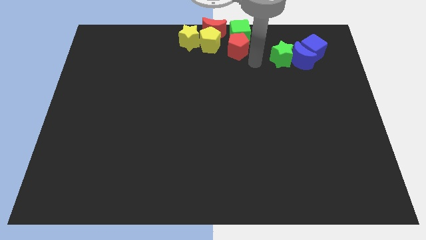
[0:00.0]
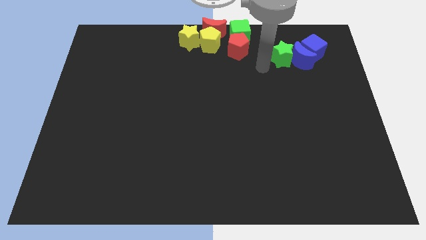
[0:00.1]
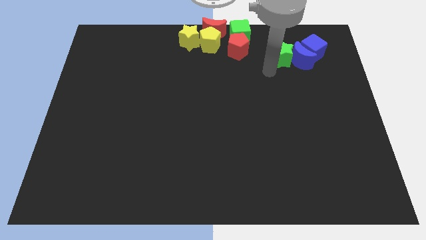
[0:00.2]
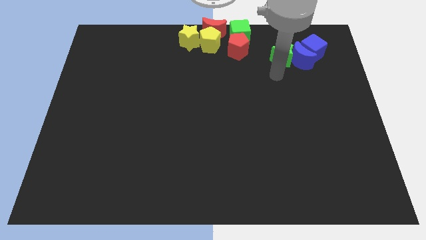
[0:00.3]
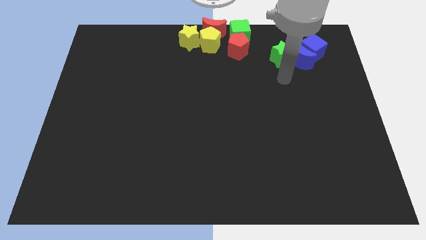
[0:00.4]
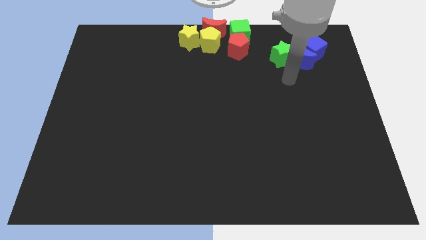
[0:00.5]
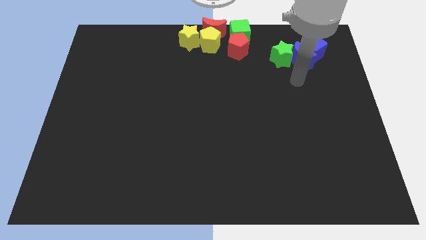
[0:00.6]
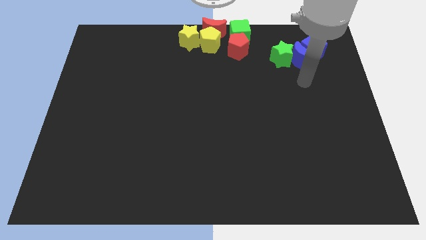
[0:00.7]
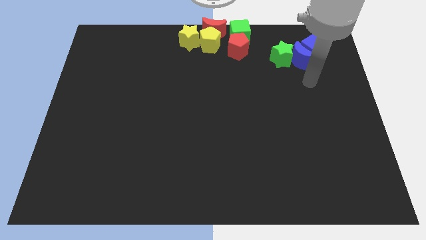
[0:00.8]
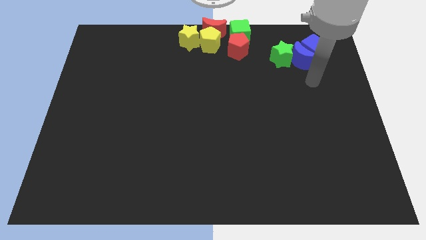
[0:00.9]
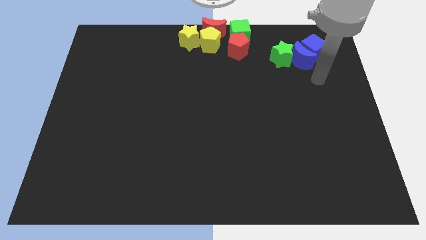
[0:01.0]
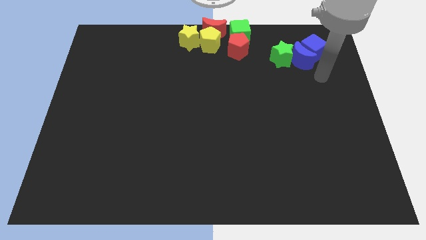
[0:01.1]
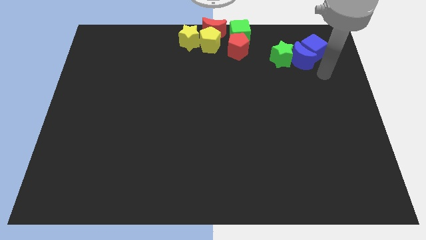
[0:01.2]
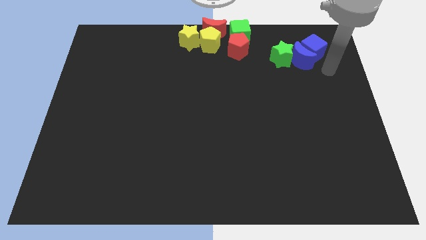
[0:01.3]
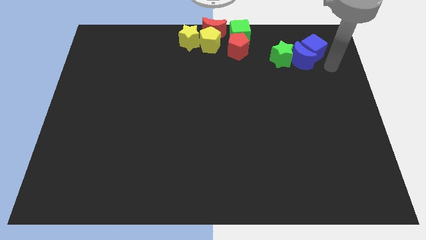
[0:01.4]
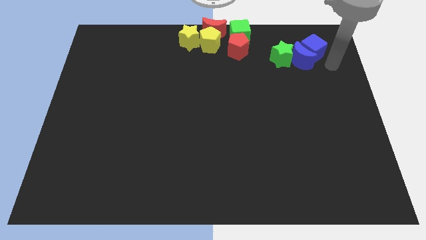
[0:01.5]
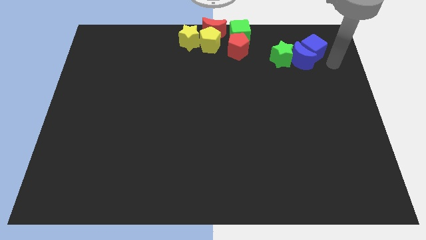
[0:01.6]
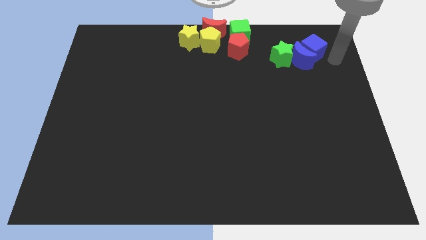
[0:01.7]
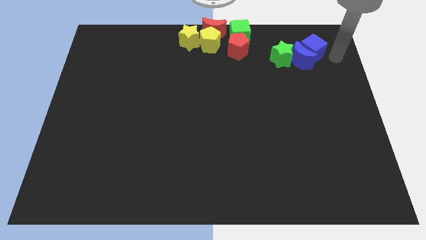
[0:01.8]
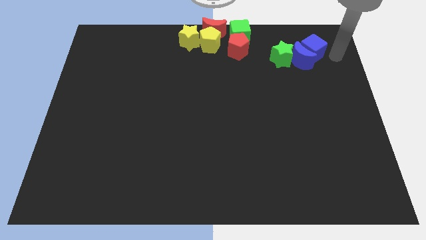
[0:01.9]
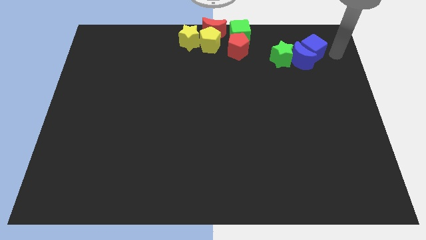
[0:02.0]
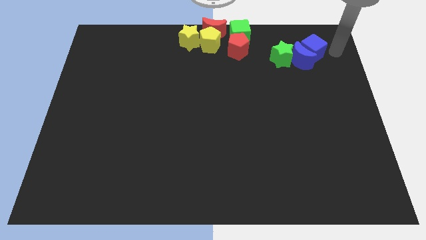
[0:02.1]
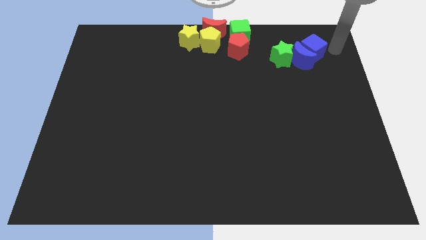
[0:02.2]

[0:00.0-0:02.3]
point at the right side of the blue cube

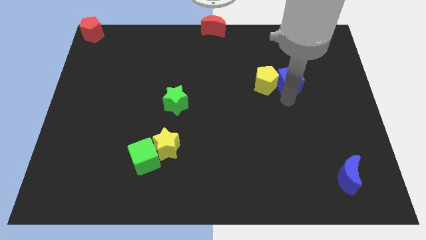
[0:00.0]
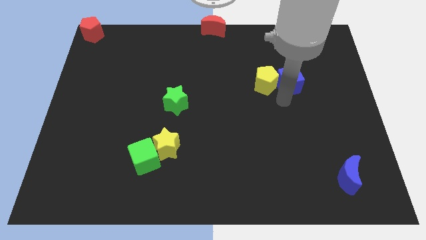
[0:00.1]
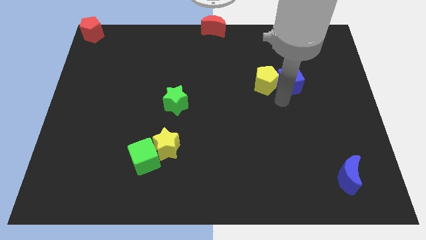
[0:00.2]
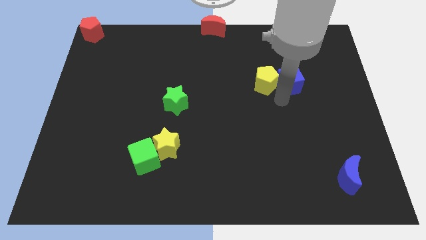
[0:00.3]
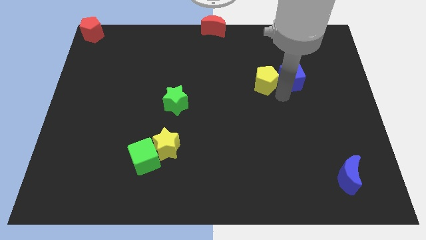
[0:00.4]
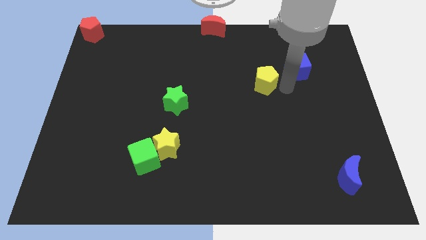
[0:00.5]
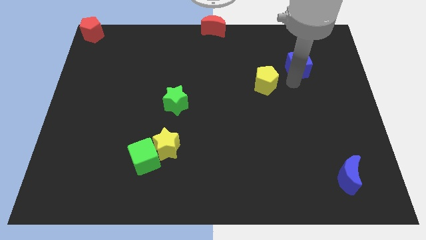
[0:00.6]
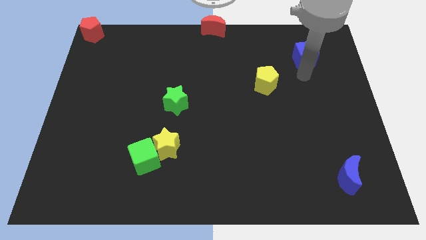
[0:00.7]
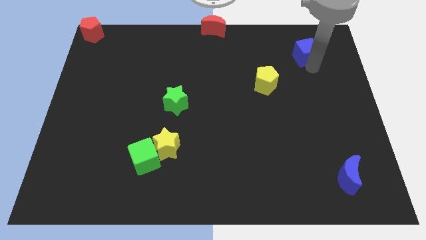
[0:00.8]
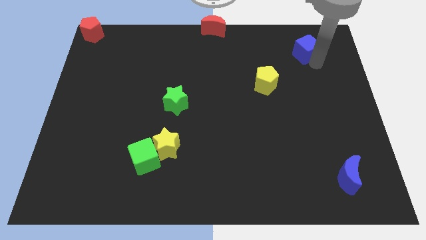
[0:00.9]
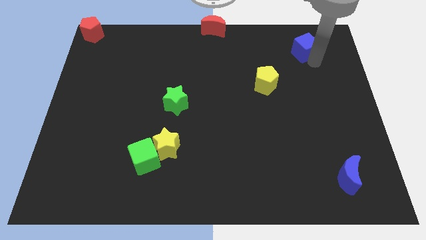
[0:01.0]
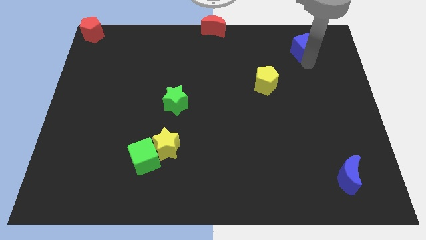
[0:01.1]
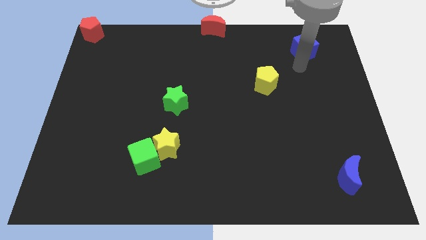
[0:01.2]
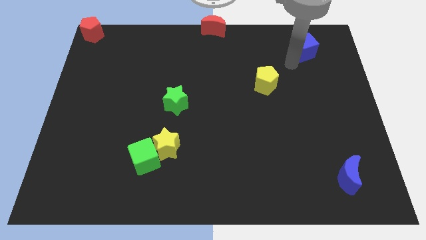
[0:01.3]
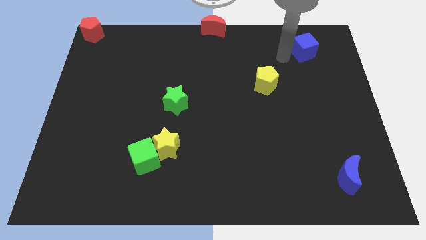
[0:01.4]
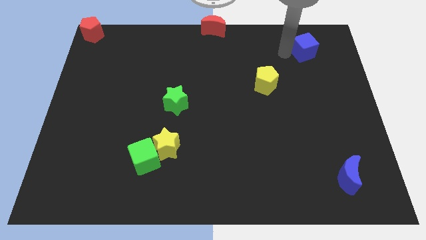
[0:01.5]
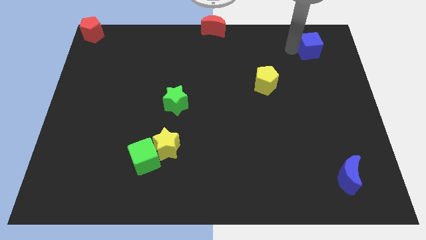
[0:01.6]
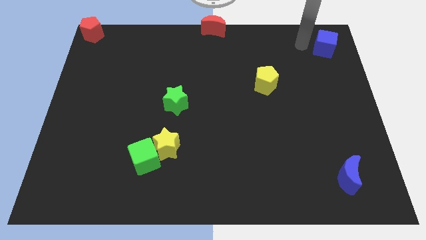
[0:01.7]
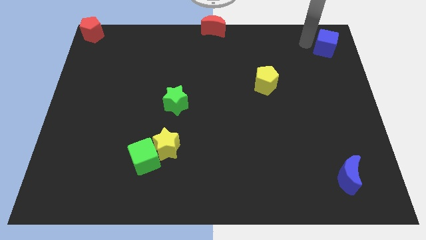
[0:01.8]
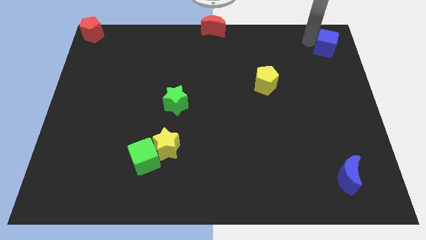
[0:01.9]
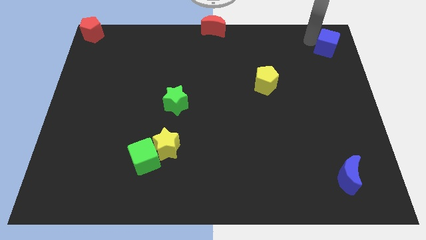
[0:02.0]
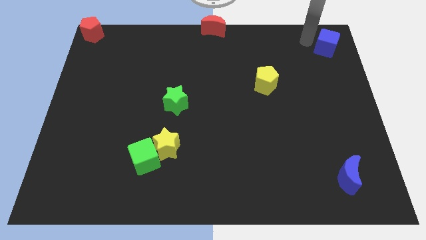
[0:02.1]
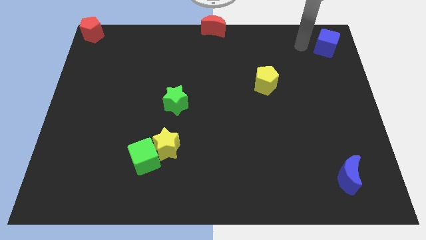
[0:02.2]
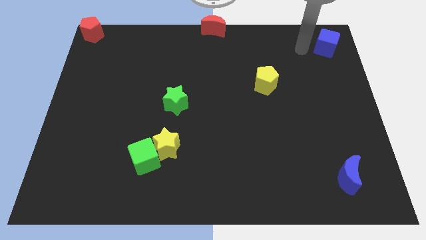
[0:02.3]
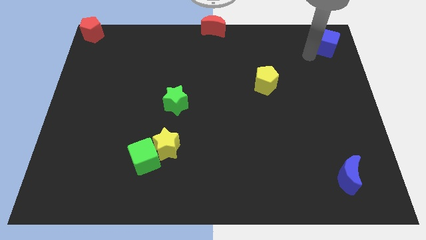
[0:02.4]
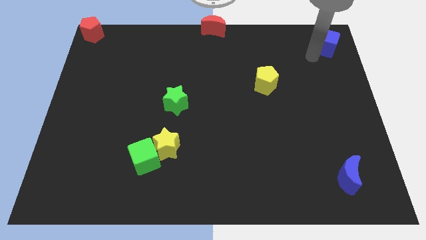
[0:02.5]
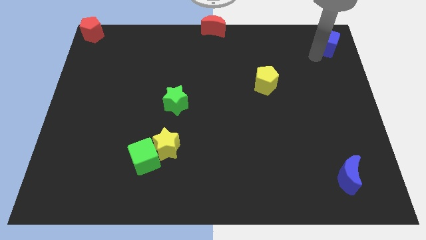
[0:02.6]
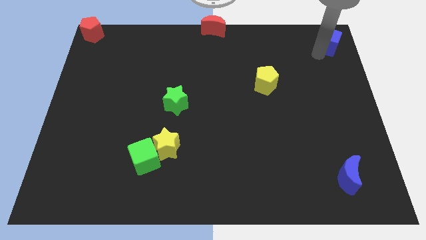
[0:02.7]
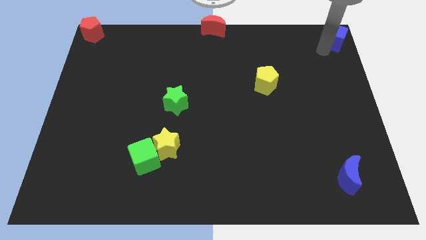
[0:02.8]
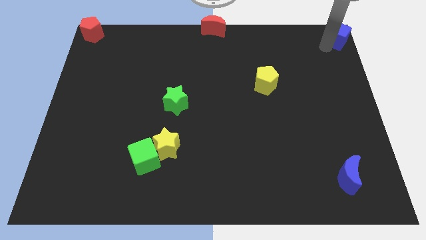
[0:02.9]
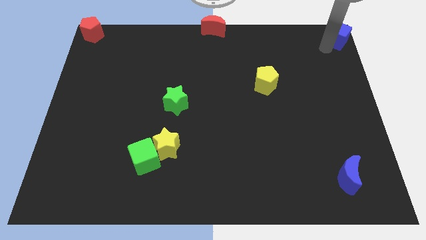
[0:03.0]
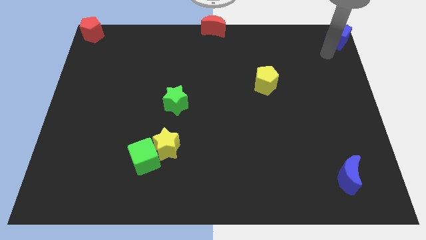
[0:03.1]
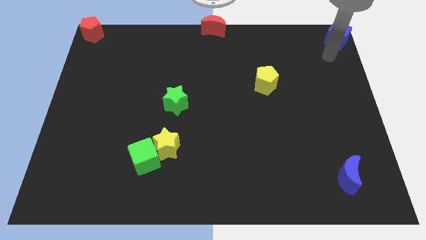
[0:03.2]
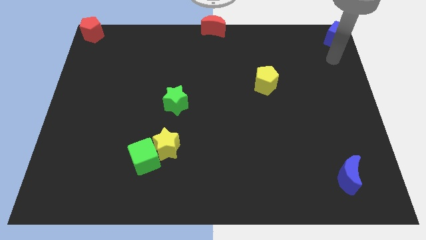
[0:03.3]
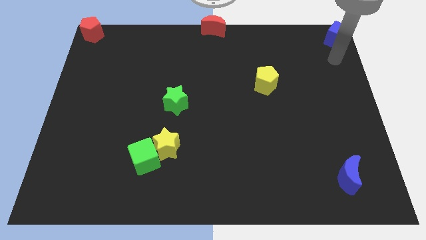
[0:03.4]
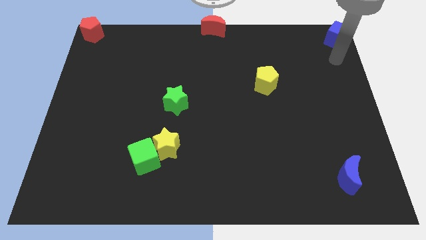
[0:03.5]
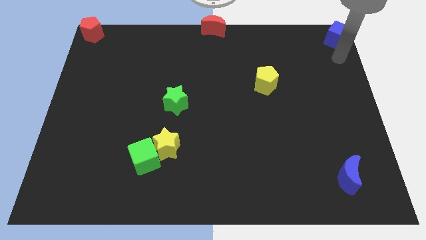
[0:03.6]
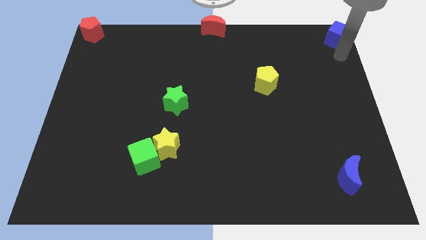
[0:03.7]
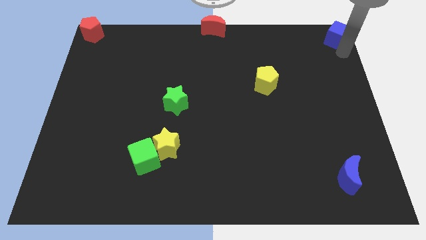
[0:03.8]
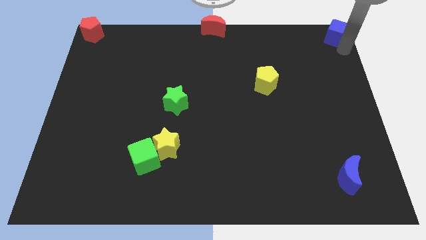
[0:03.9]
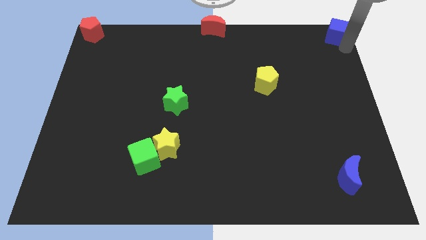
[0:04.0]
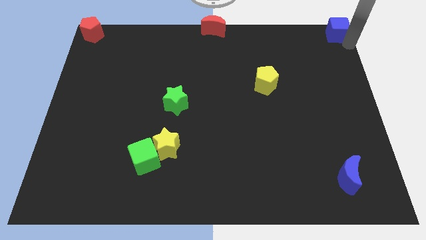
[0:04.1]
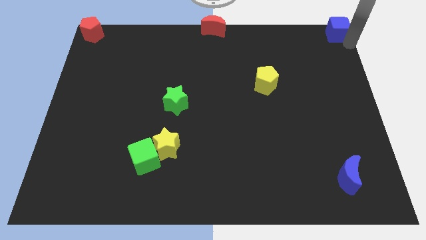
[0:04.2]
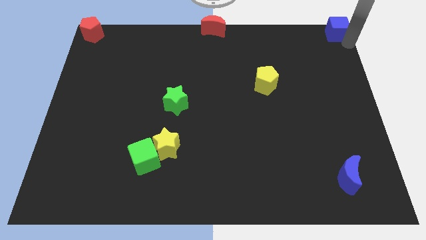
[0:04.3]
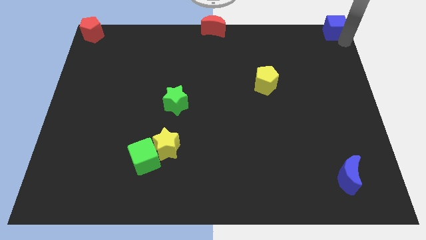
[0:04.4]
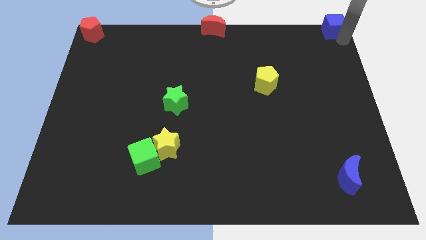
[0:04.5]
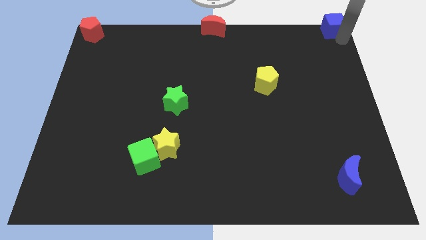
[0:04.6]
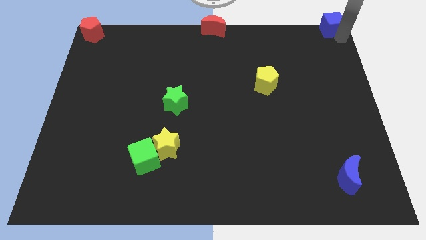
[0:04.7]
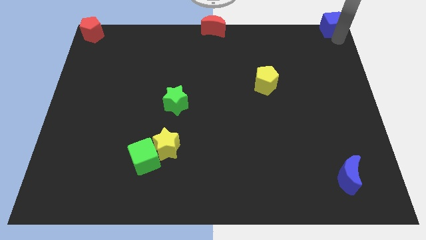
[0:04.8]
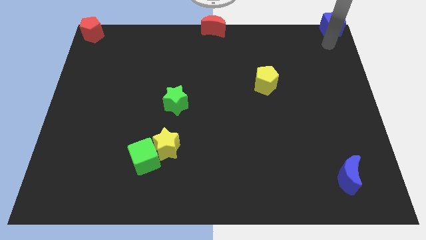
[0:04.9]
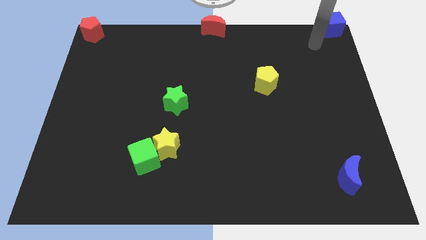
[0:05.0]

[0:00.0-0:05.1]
slide blue cube to the top right corner

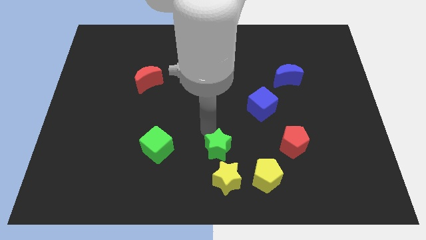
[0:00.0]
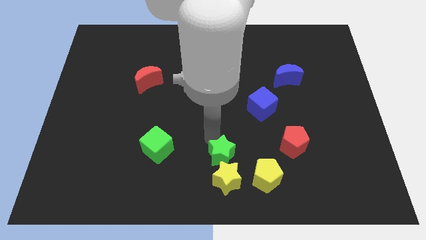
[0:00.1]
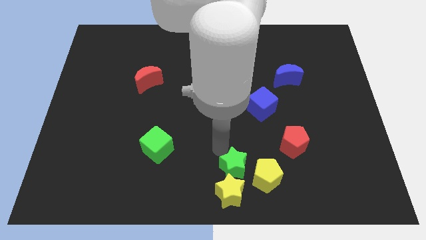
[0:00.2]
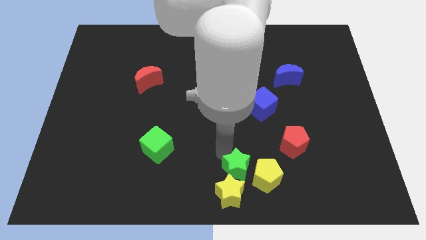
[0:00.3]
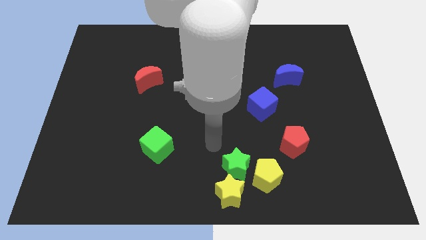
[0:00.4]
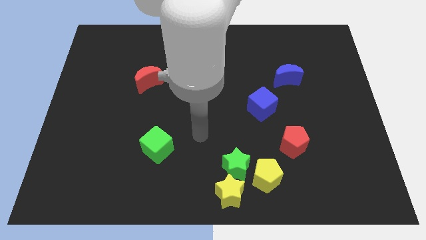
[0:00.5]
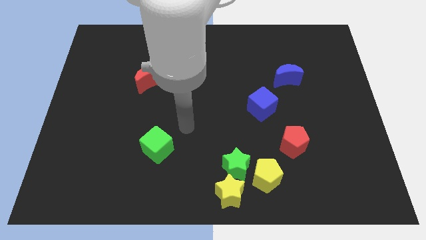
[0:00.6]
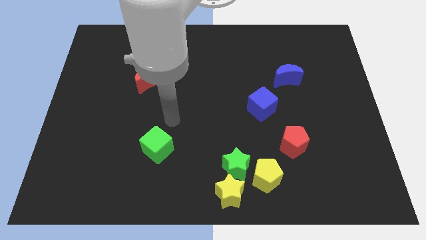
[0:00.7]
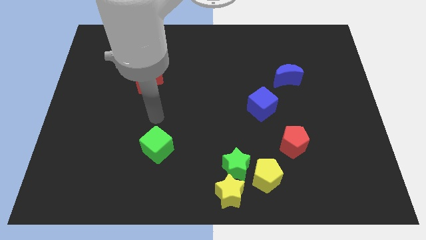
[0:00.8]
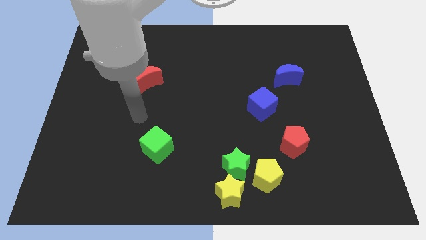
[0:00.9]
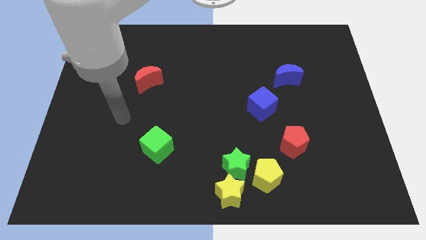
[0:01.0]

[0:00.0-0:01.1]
move the two stars to the bottom middle of the board

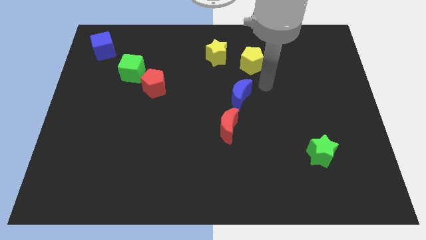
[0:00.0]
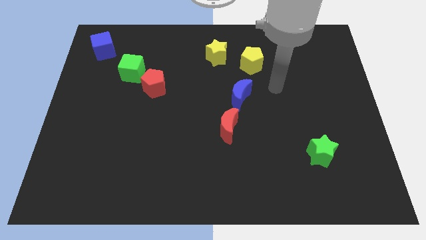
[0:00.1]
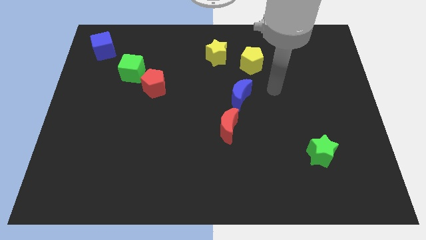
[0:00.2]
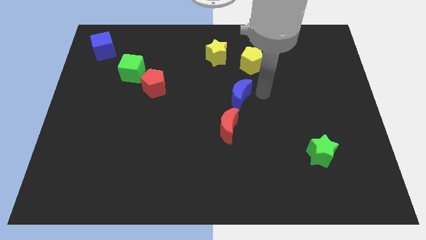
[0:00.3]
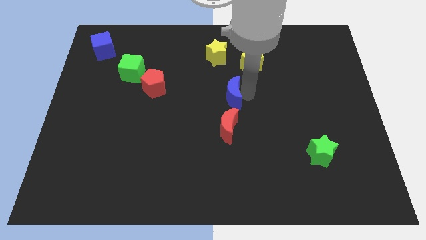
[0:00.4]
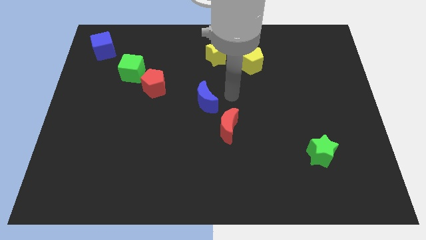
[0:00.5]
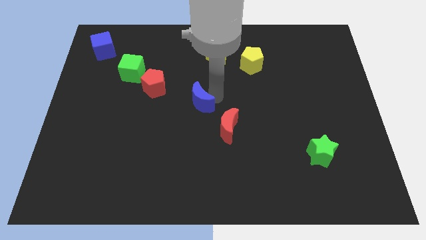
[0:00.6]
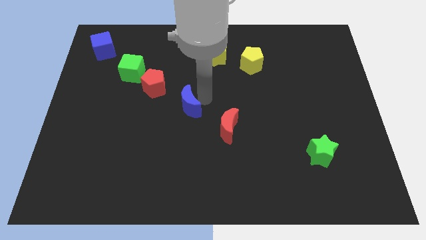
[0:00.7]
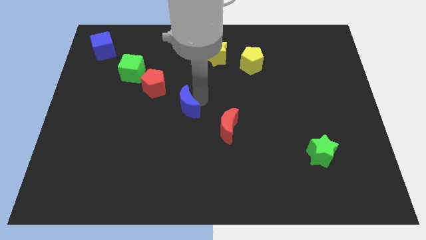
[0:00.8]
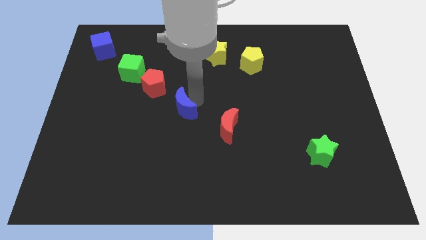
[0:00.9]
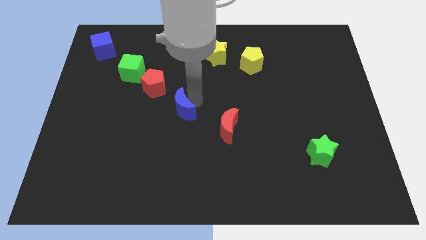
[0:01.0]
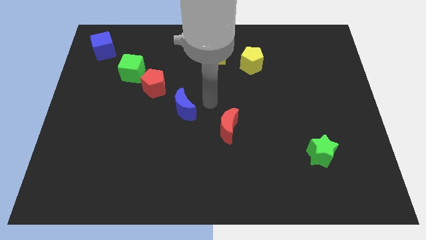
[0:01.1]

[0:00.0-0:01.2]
place the blue moon beside the red pentagon to form a line
